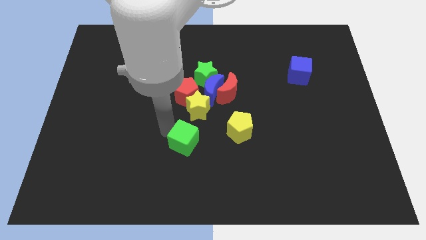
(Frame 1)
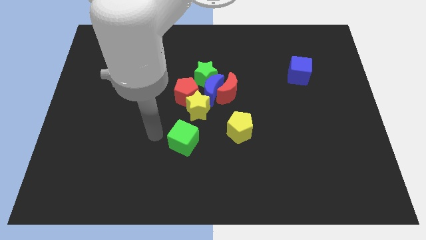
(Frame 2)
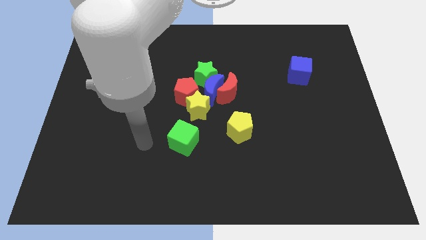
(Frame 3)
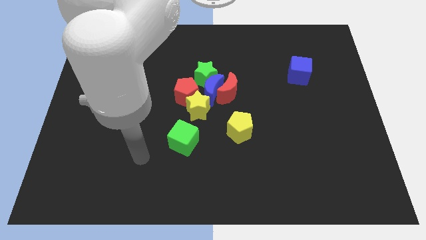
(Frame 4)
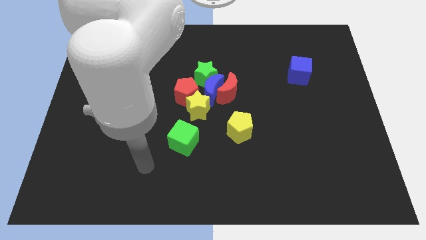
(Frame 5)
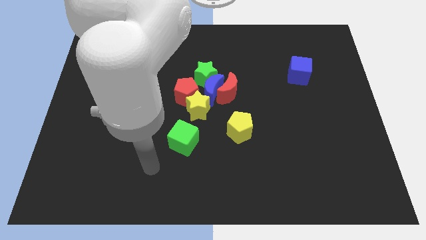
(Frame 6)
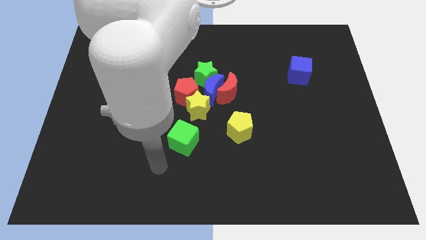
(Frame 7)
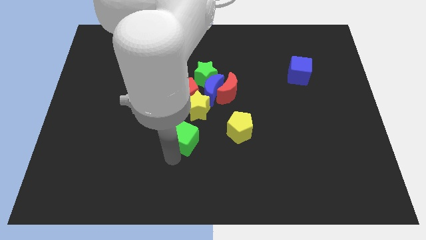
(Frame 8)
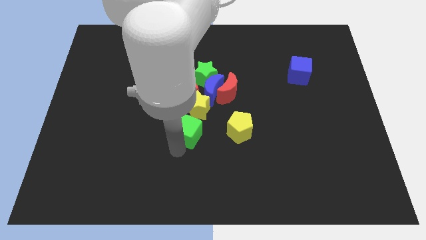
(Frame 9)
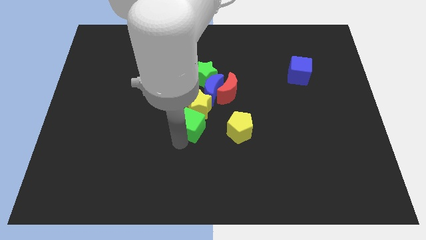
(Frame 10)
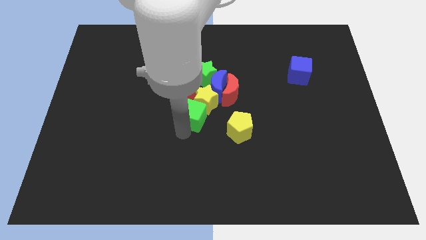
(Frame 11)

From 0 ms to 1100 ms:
push the green cube into the yellow star

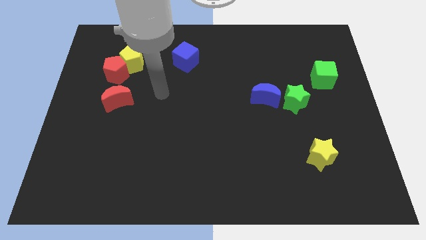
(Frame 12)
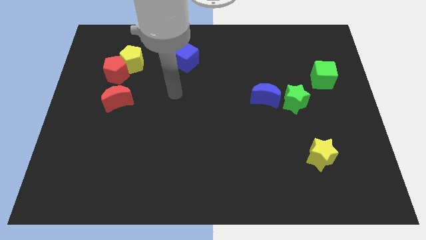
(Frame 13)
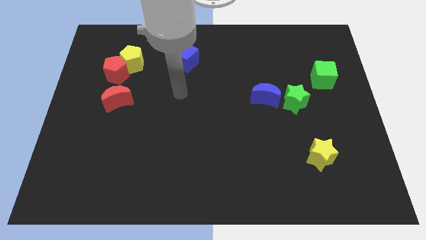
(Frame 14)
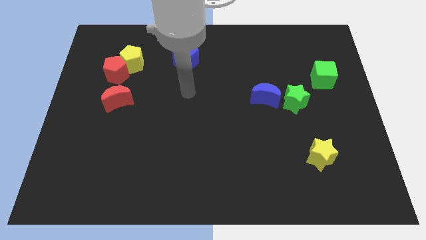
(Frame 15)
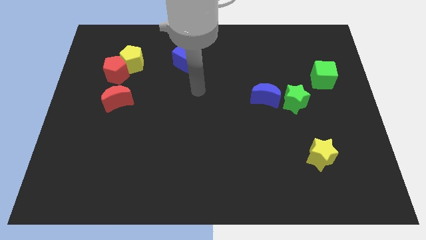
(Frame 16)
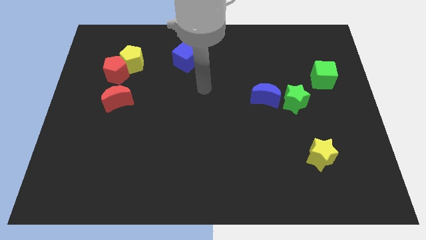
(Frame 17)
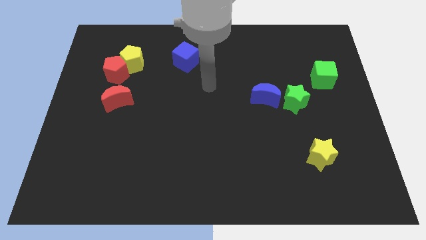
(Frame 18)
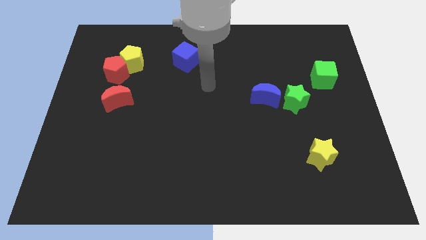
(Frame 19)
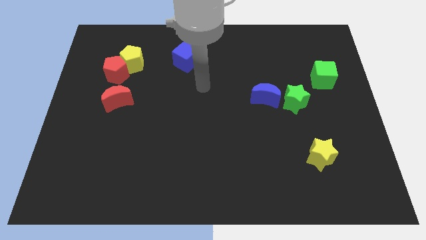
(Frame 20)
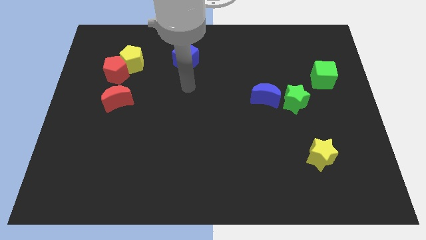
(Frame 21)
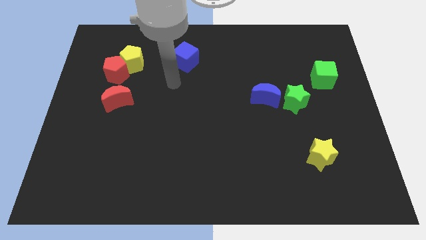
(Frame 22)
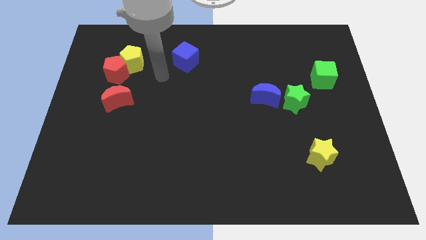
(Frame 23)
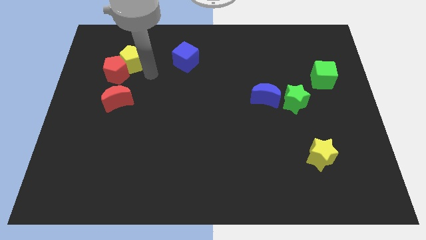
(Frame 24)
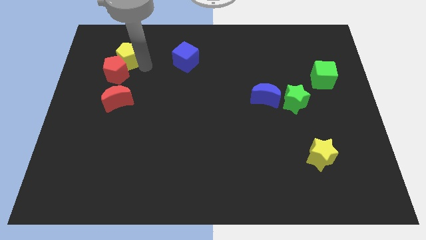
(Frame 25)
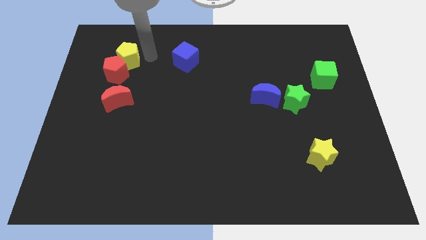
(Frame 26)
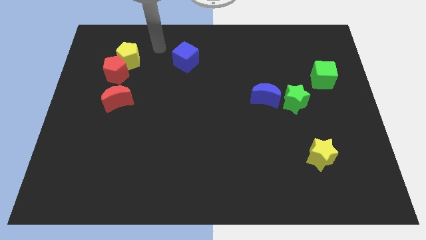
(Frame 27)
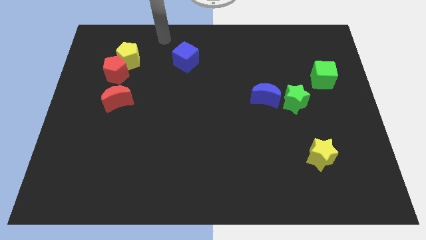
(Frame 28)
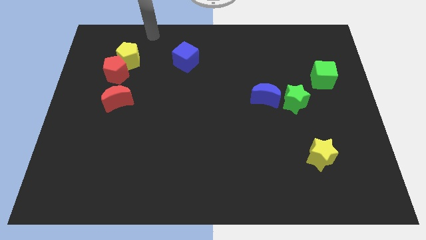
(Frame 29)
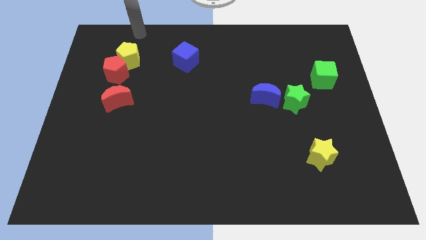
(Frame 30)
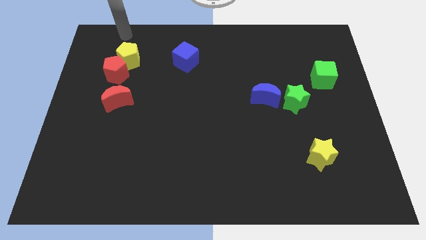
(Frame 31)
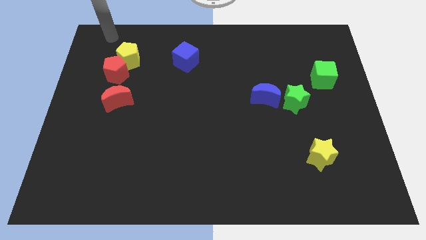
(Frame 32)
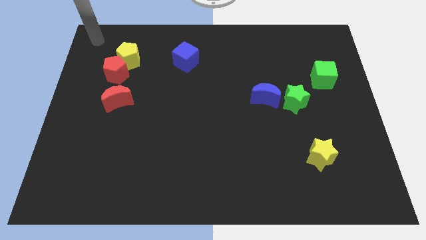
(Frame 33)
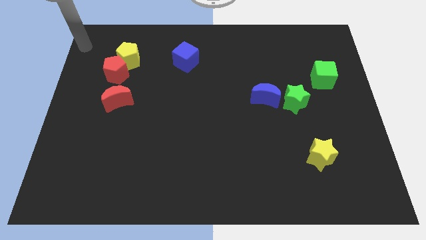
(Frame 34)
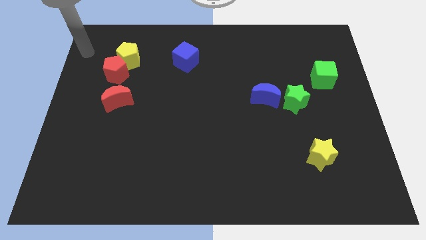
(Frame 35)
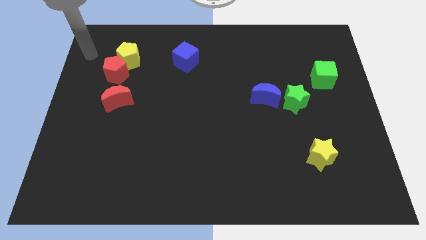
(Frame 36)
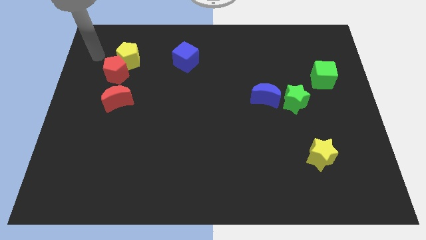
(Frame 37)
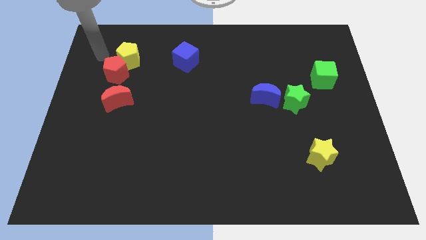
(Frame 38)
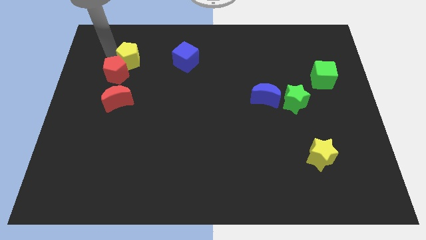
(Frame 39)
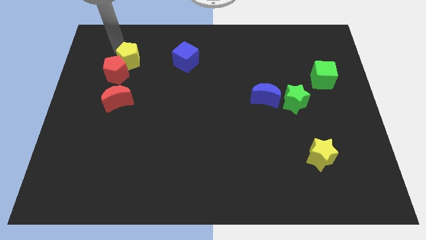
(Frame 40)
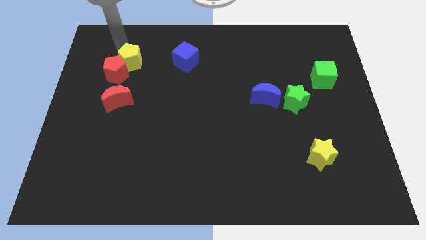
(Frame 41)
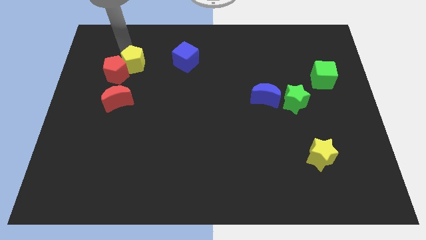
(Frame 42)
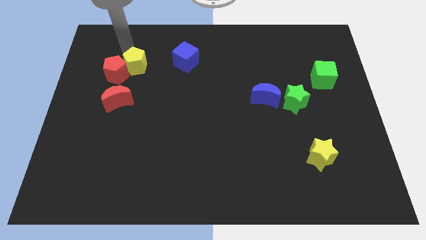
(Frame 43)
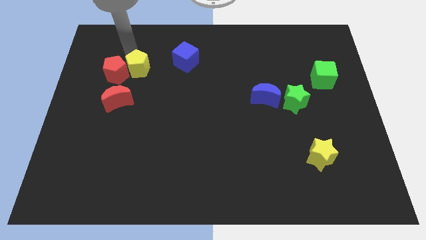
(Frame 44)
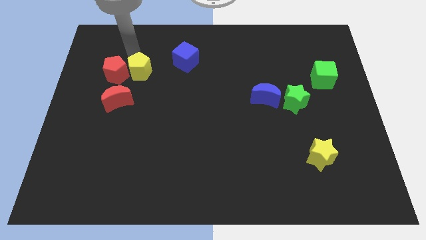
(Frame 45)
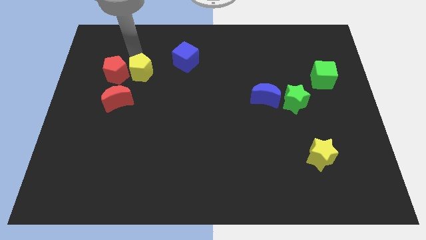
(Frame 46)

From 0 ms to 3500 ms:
move the yellow pentagon to the right side of the red pentagon

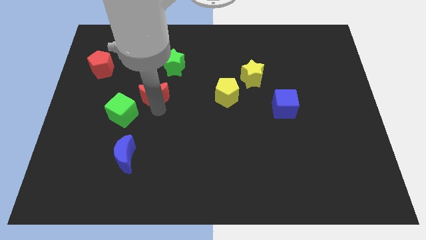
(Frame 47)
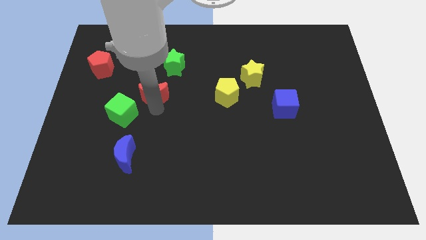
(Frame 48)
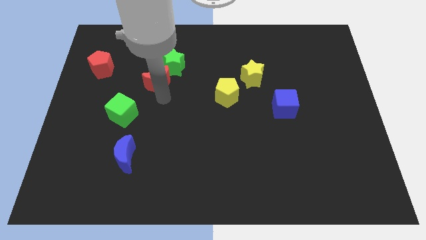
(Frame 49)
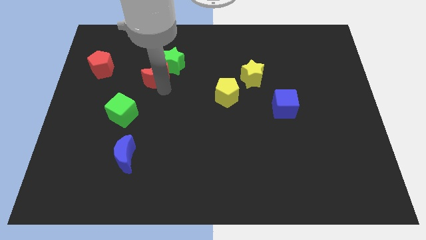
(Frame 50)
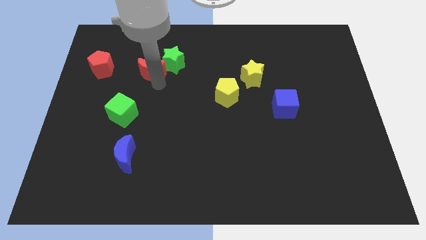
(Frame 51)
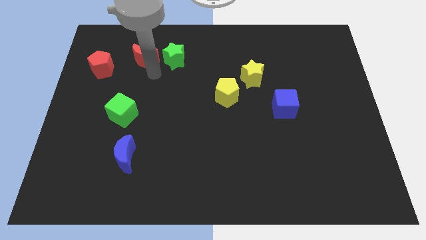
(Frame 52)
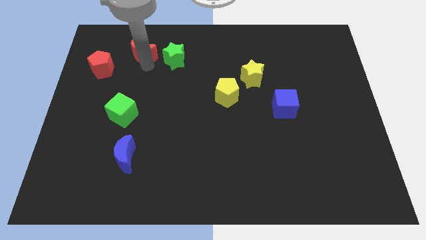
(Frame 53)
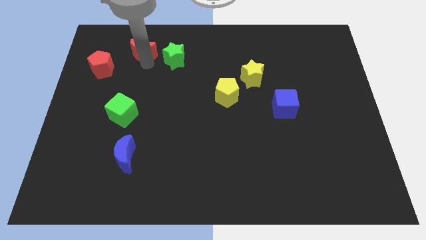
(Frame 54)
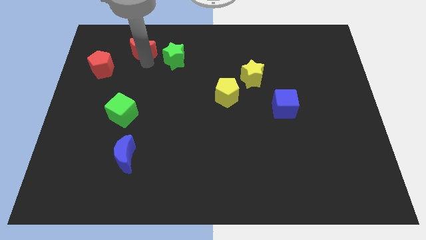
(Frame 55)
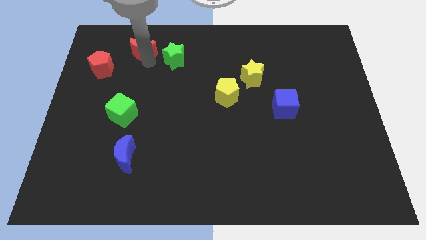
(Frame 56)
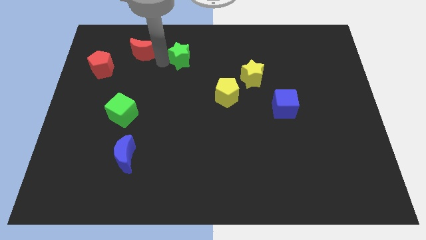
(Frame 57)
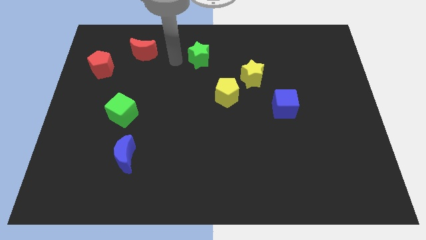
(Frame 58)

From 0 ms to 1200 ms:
slightly touch green star with red moon

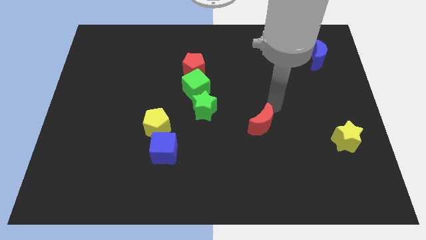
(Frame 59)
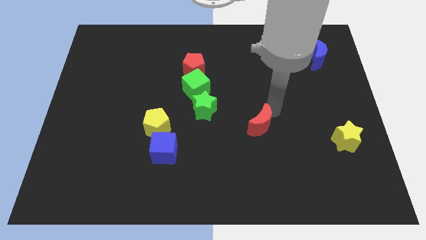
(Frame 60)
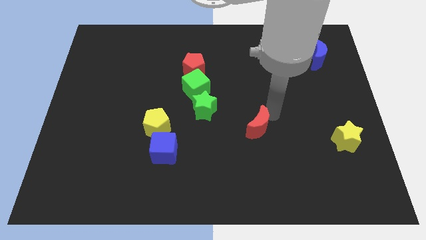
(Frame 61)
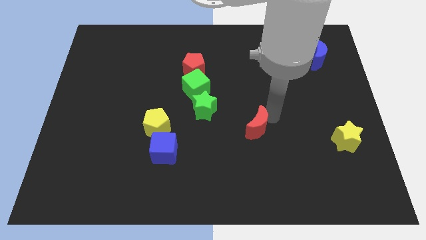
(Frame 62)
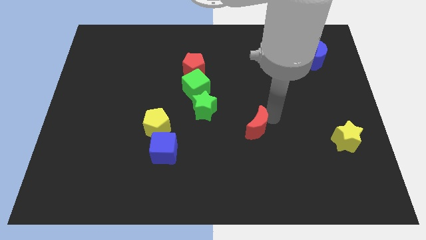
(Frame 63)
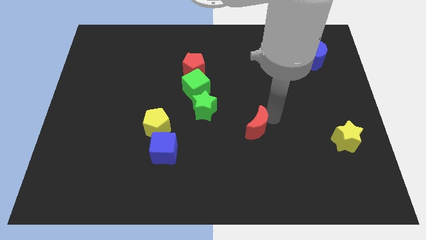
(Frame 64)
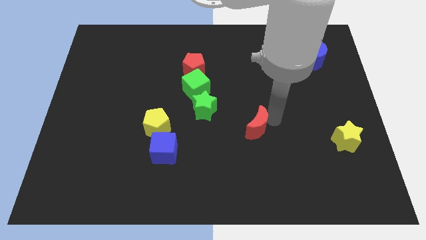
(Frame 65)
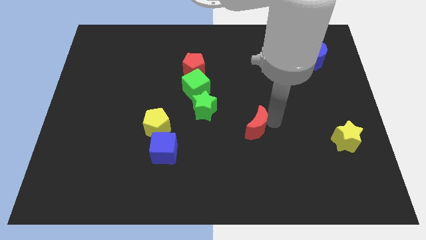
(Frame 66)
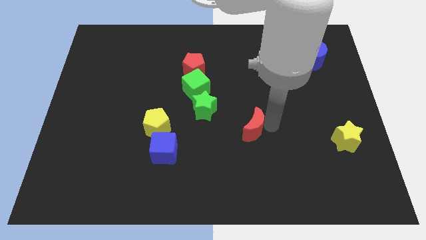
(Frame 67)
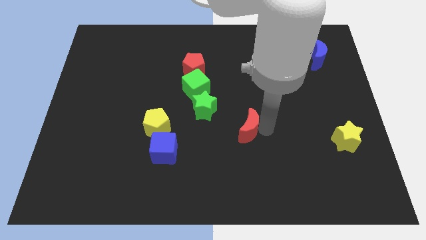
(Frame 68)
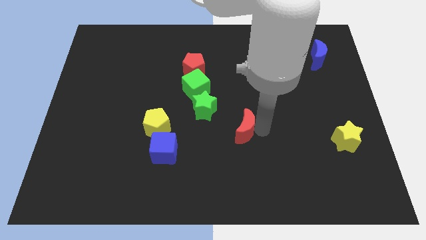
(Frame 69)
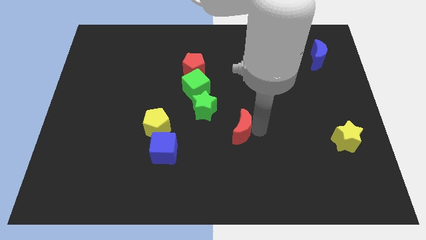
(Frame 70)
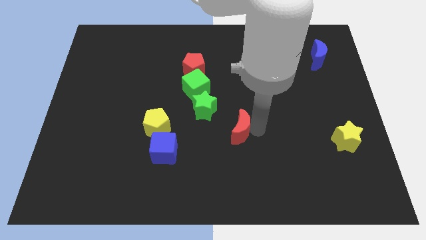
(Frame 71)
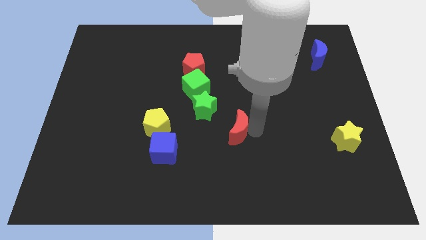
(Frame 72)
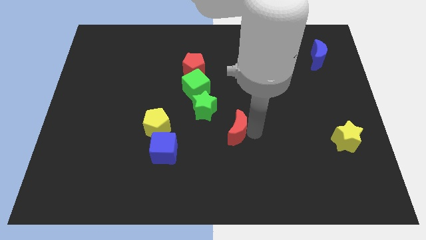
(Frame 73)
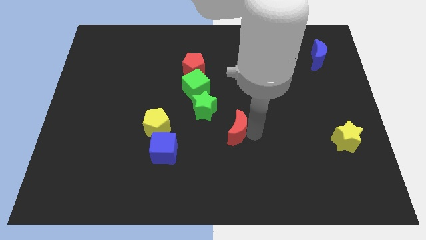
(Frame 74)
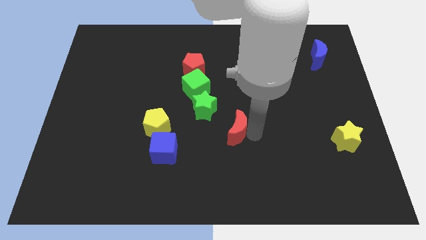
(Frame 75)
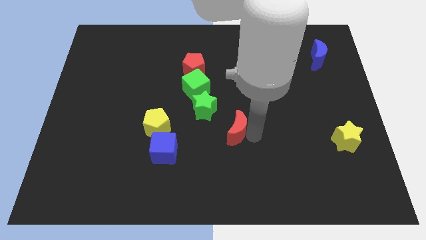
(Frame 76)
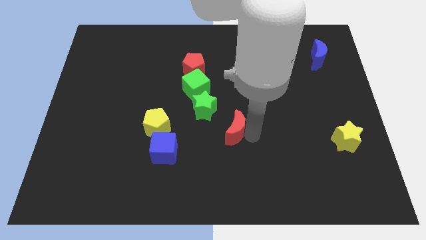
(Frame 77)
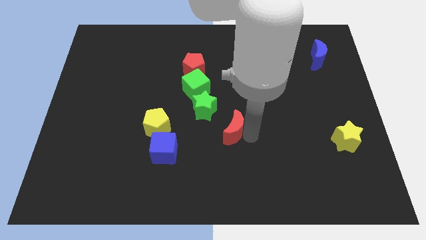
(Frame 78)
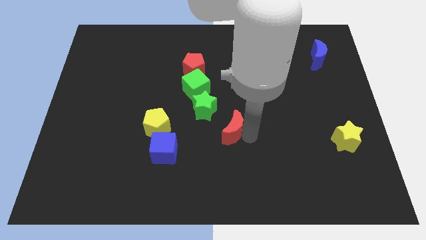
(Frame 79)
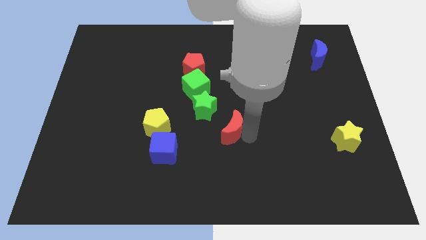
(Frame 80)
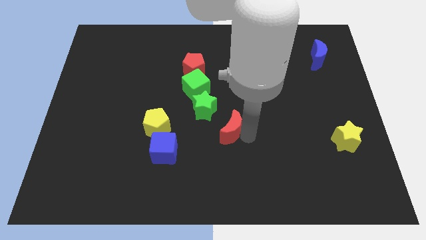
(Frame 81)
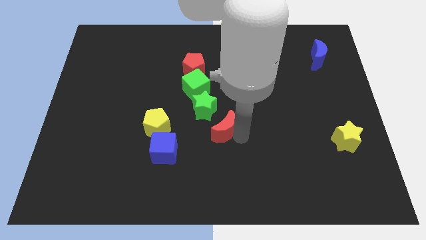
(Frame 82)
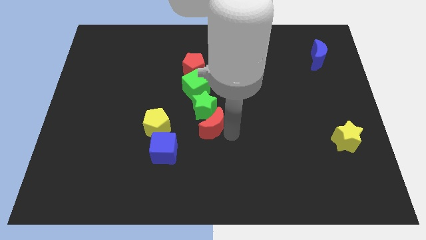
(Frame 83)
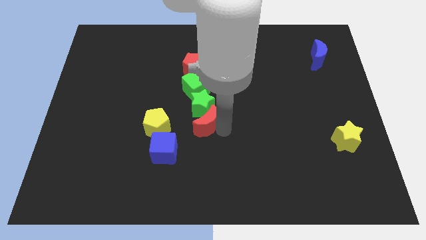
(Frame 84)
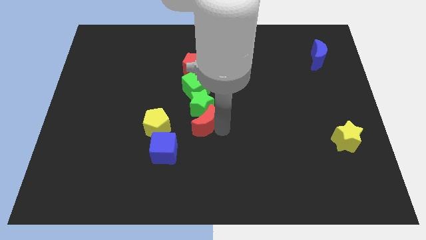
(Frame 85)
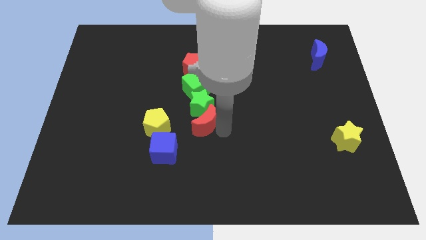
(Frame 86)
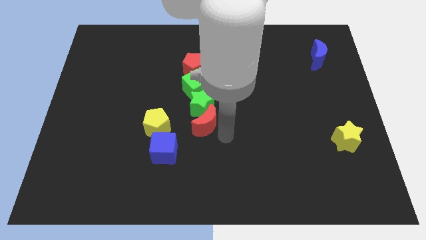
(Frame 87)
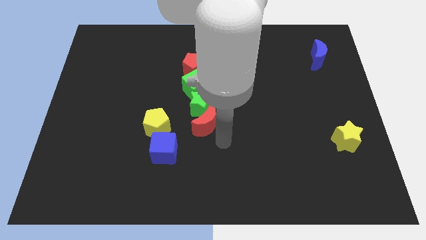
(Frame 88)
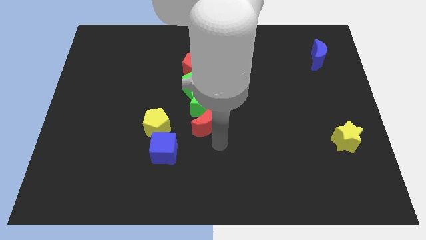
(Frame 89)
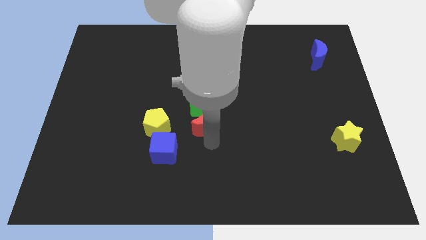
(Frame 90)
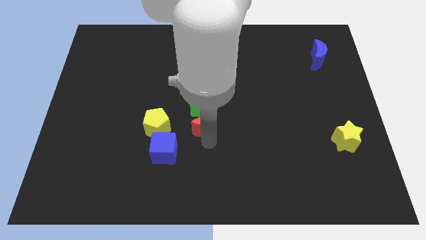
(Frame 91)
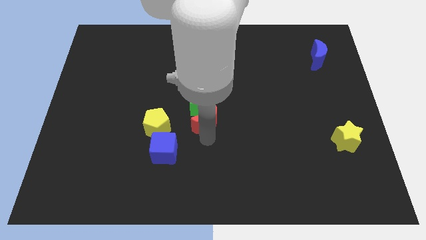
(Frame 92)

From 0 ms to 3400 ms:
move the red crescent to the bottom of the green star
